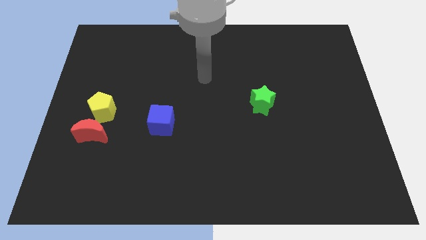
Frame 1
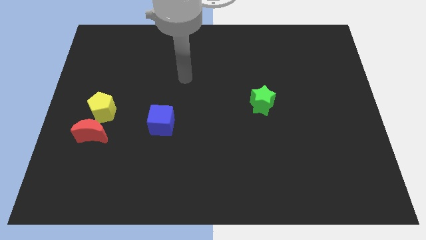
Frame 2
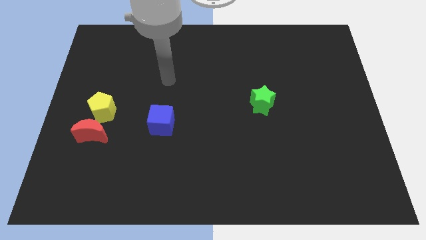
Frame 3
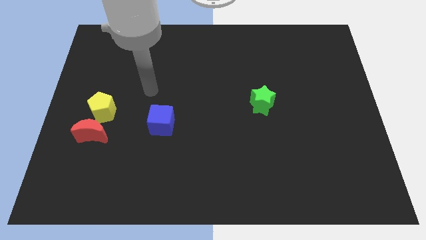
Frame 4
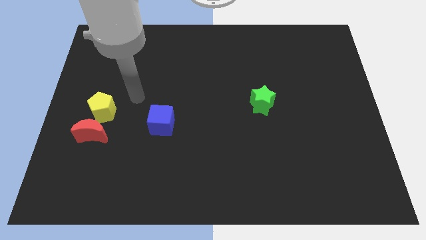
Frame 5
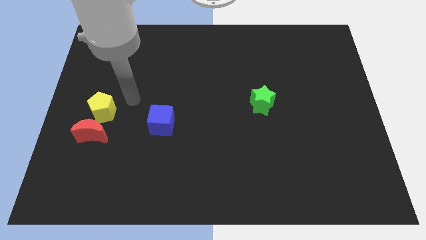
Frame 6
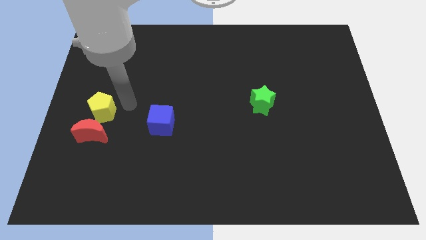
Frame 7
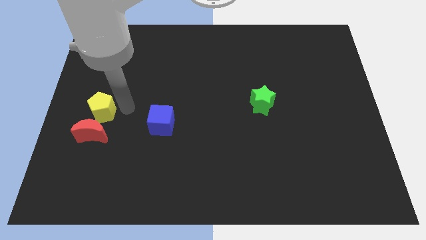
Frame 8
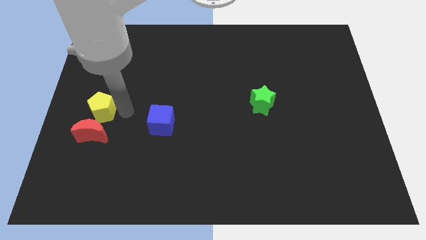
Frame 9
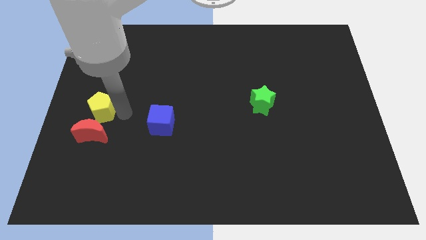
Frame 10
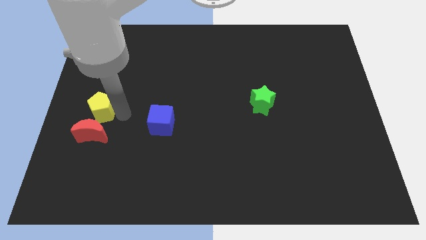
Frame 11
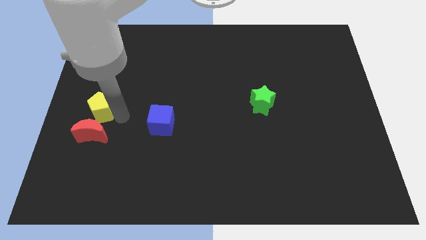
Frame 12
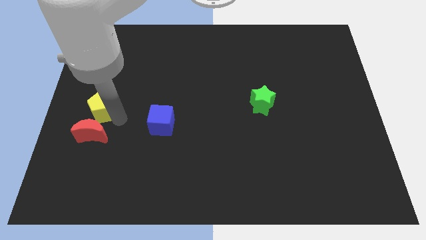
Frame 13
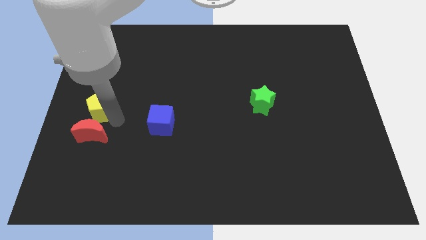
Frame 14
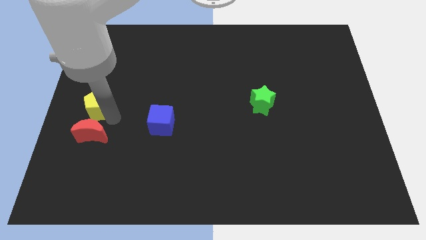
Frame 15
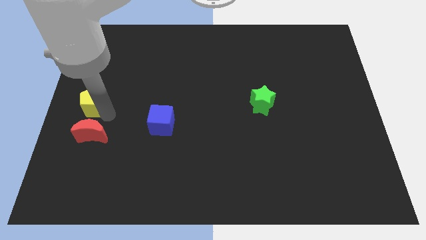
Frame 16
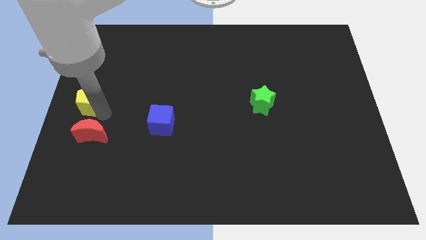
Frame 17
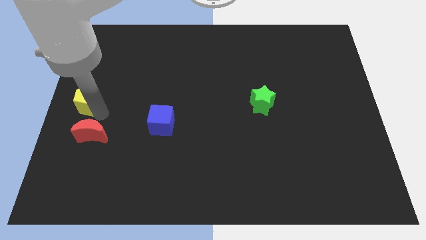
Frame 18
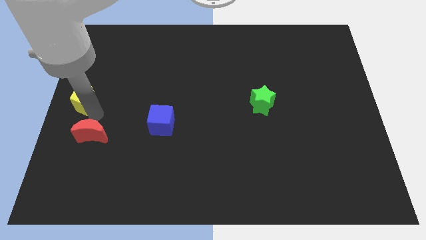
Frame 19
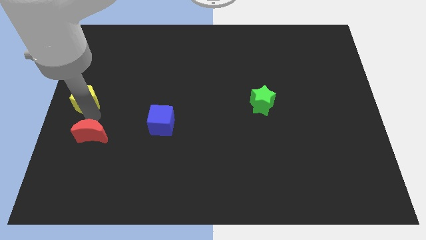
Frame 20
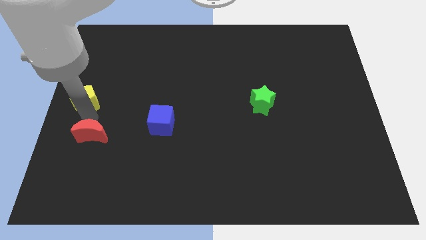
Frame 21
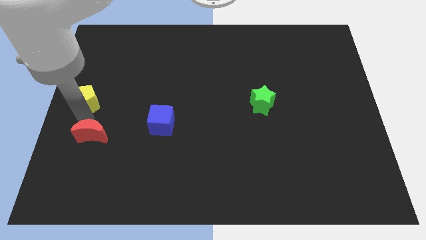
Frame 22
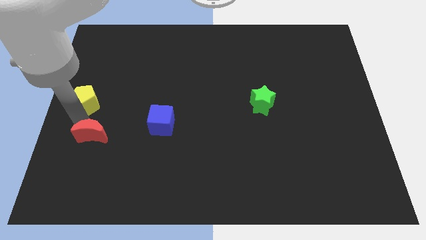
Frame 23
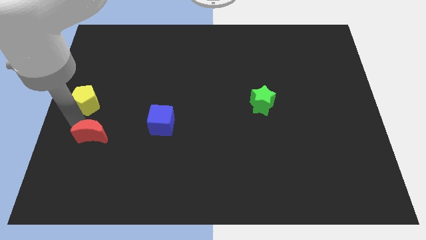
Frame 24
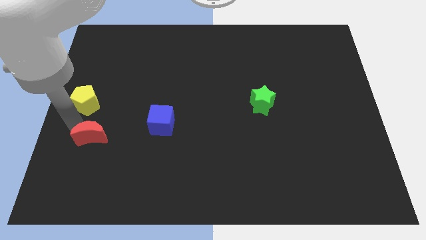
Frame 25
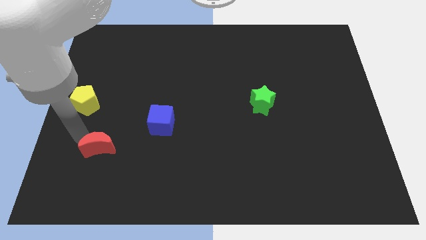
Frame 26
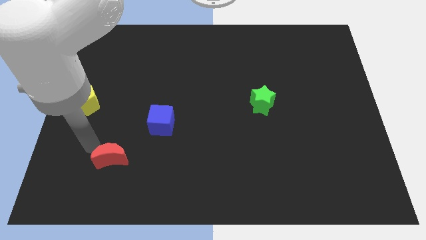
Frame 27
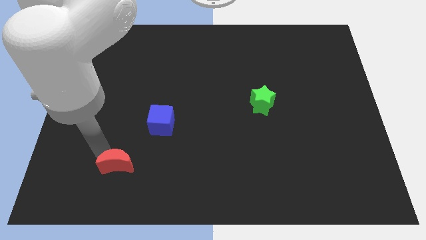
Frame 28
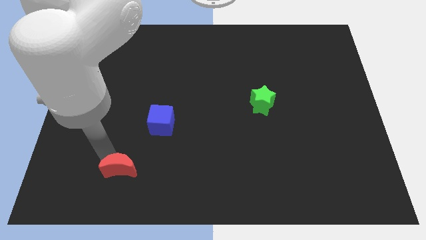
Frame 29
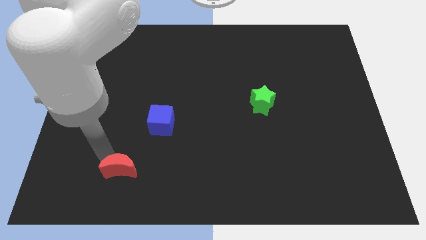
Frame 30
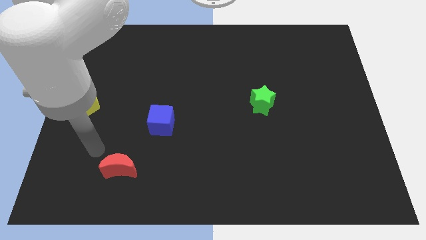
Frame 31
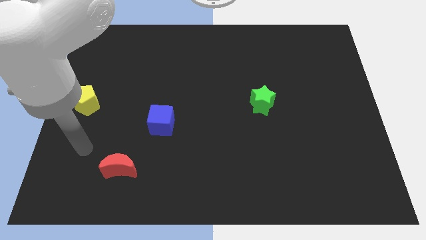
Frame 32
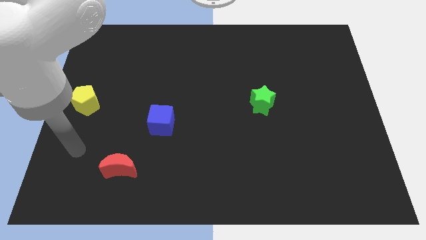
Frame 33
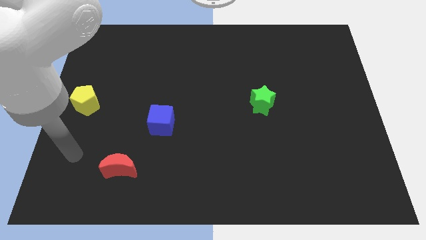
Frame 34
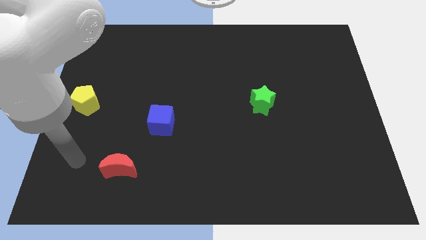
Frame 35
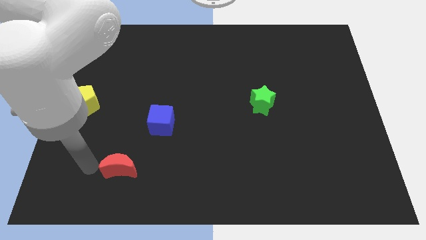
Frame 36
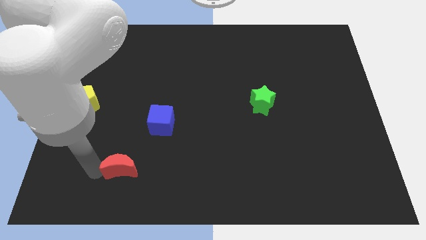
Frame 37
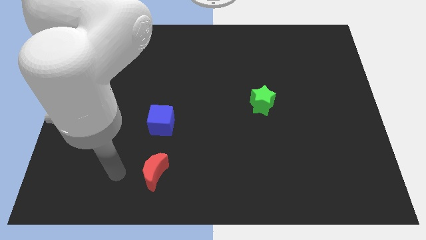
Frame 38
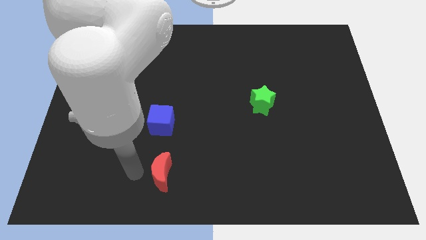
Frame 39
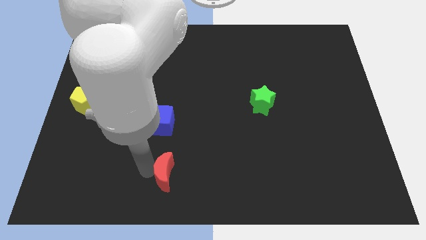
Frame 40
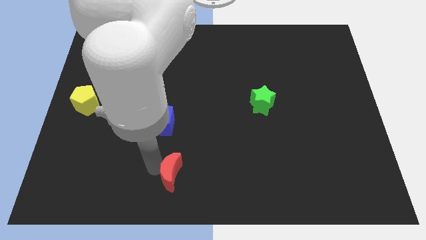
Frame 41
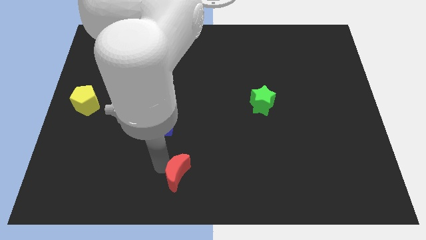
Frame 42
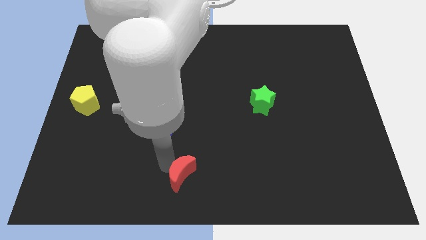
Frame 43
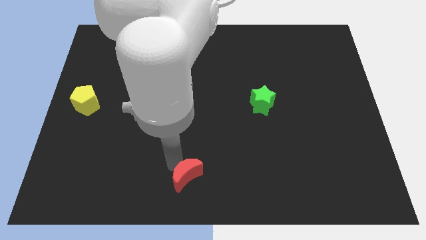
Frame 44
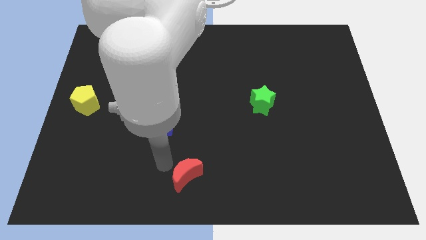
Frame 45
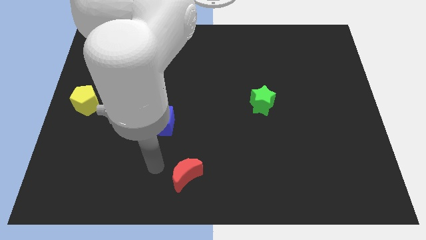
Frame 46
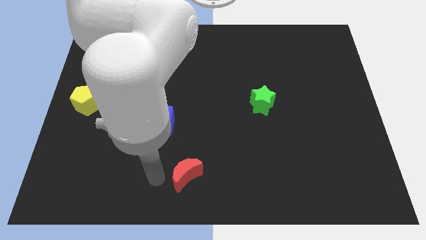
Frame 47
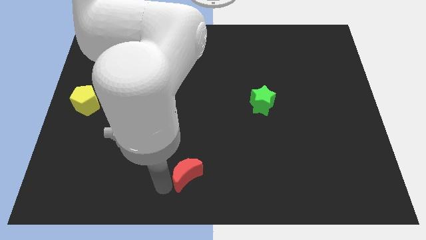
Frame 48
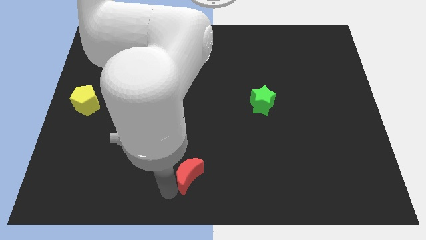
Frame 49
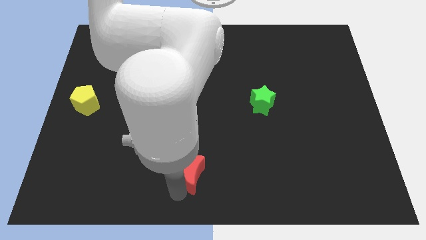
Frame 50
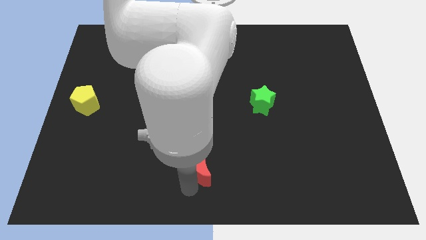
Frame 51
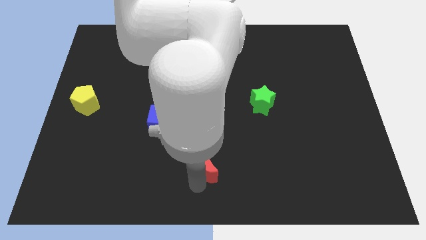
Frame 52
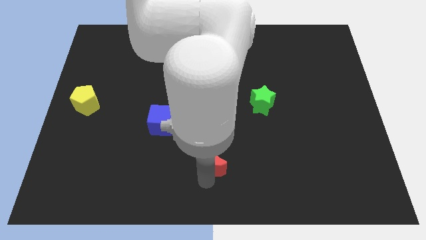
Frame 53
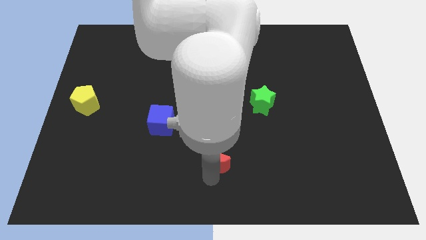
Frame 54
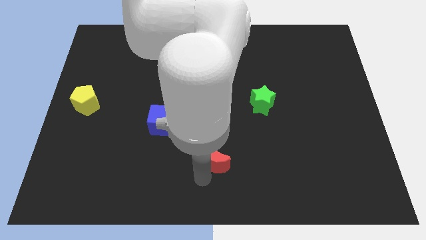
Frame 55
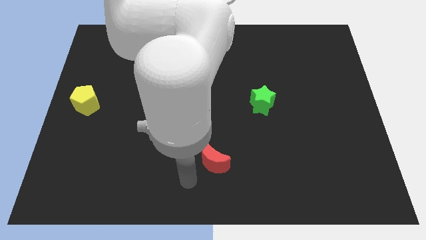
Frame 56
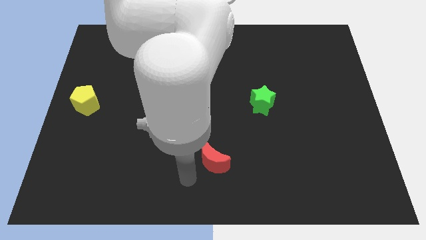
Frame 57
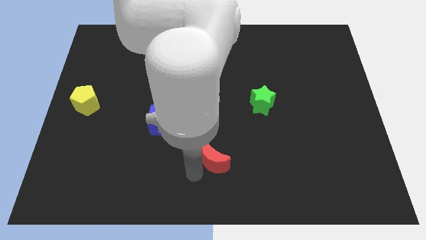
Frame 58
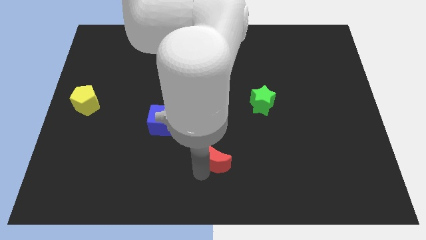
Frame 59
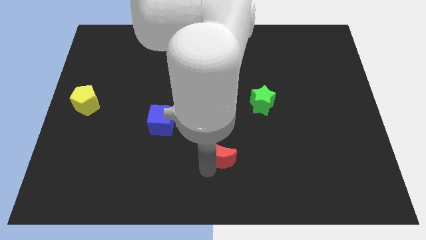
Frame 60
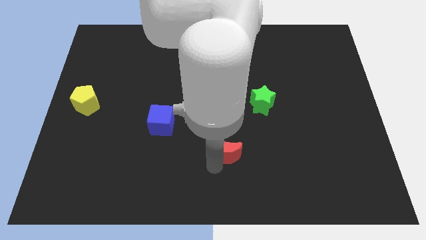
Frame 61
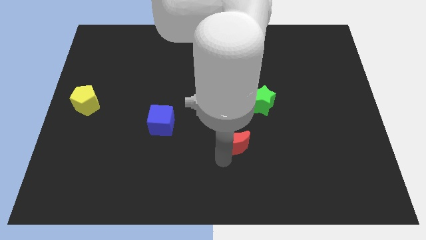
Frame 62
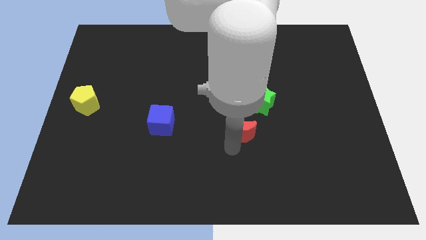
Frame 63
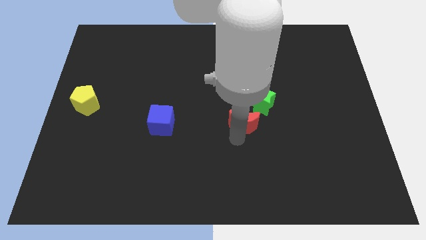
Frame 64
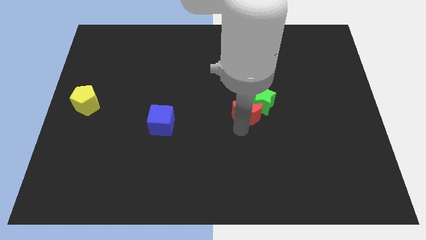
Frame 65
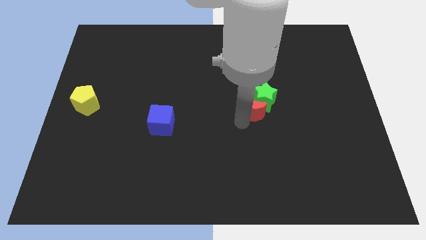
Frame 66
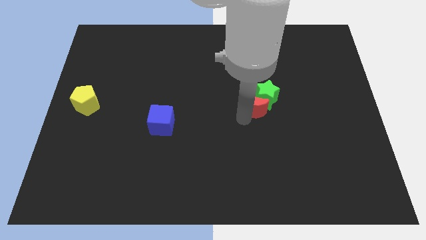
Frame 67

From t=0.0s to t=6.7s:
slide the red moon next to the green star

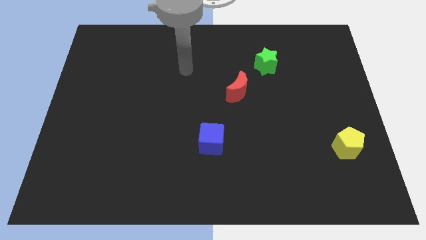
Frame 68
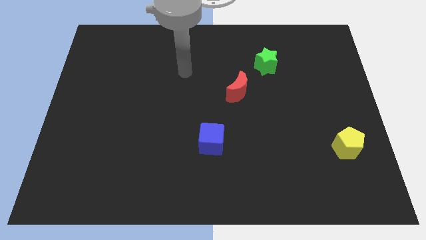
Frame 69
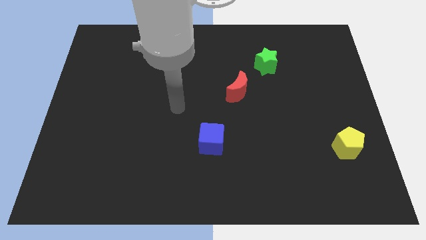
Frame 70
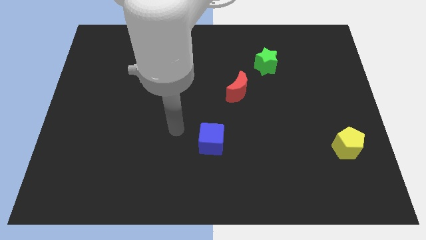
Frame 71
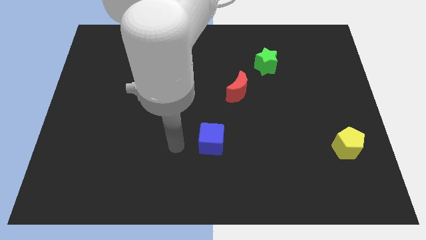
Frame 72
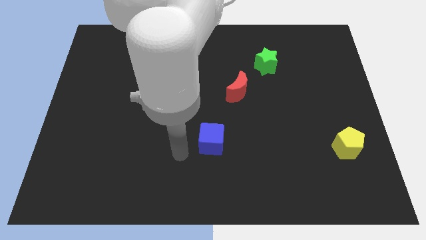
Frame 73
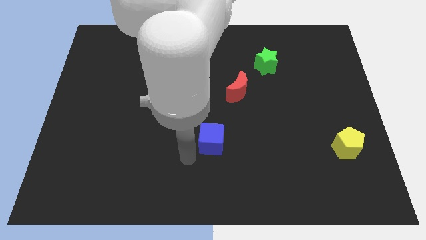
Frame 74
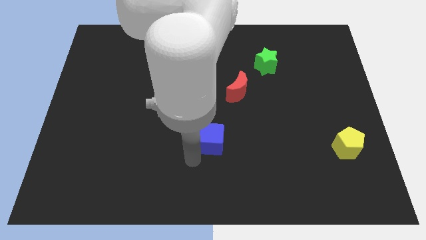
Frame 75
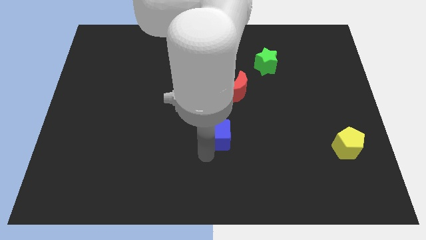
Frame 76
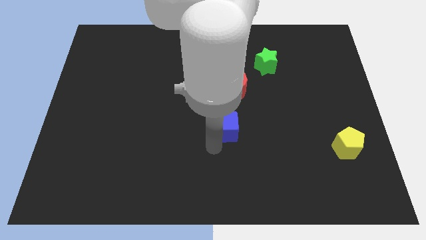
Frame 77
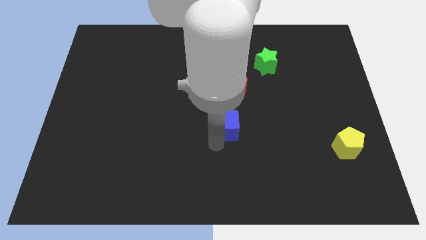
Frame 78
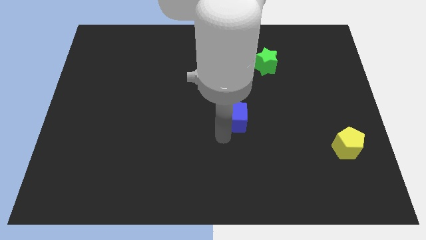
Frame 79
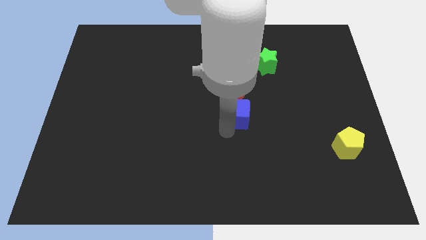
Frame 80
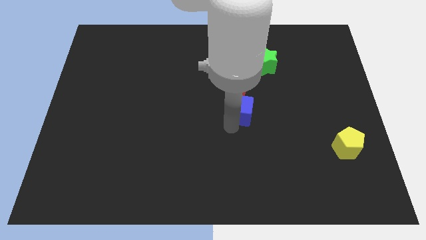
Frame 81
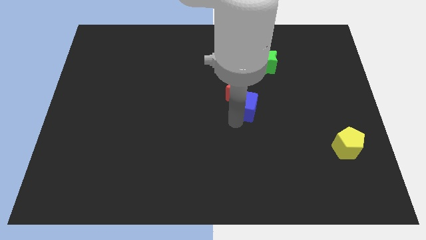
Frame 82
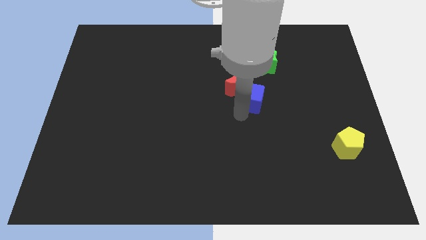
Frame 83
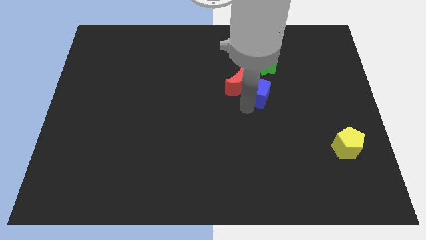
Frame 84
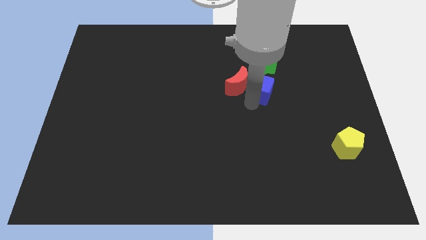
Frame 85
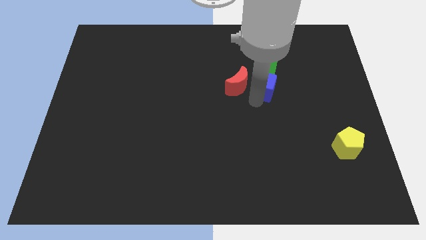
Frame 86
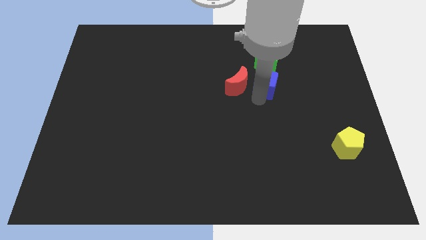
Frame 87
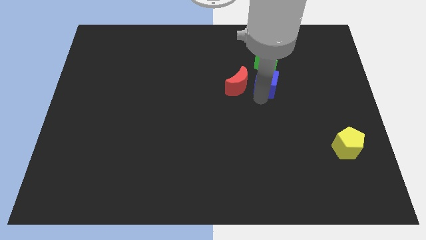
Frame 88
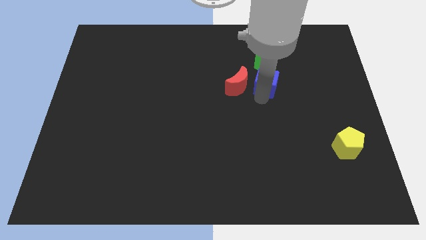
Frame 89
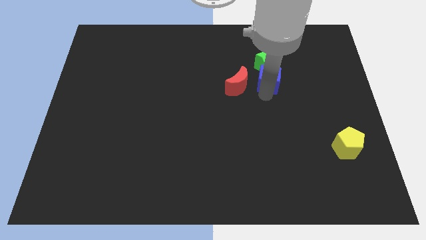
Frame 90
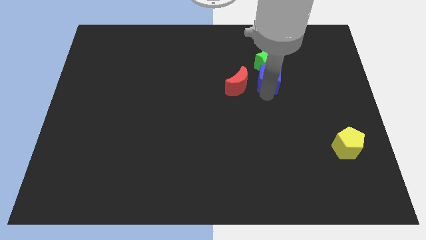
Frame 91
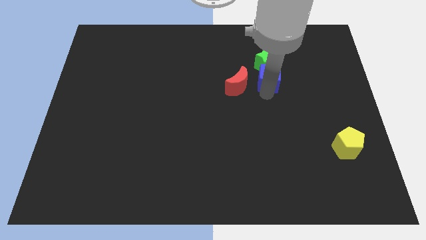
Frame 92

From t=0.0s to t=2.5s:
put the cube to the star
